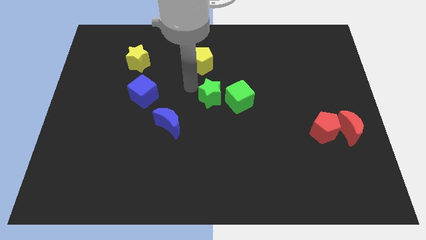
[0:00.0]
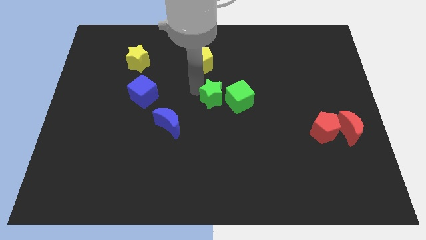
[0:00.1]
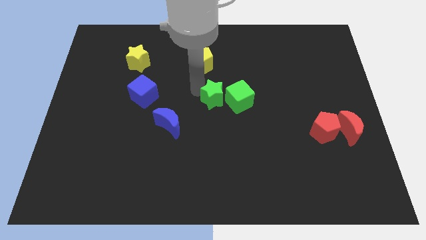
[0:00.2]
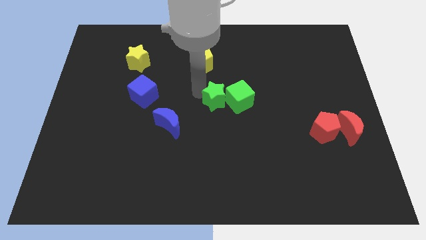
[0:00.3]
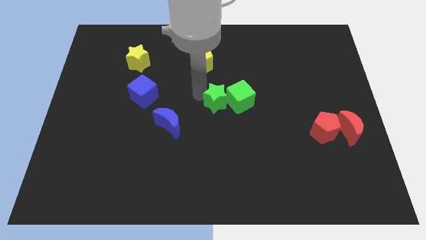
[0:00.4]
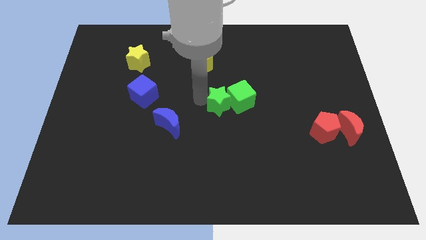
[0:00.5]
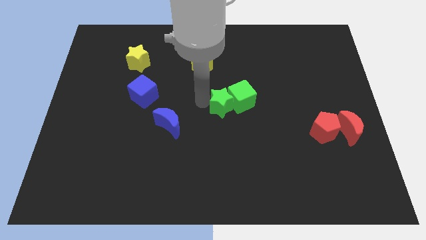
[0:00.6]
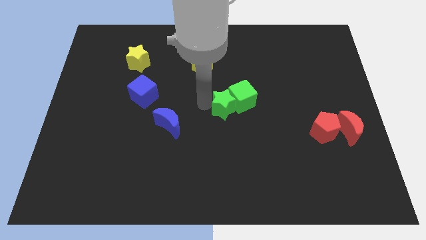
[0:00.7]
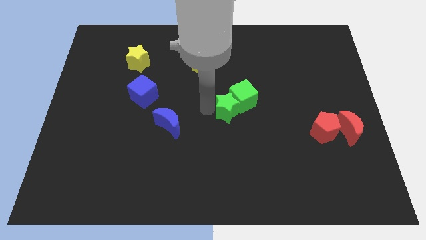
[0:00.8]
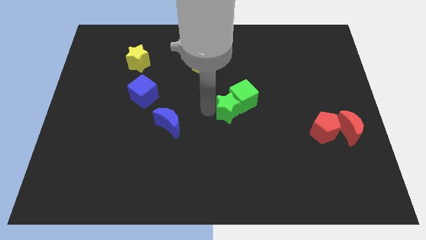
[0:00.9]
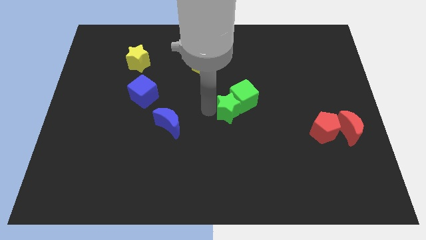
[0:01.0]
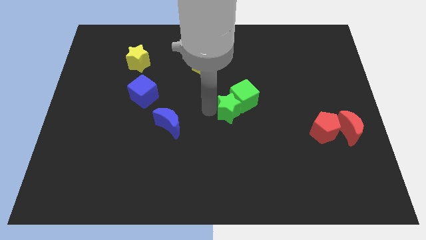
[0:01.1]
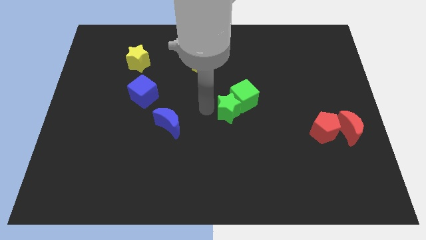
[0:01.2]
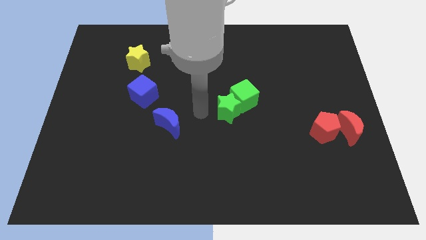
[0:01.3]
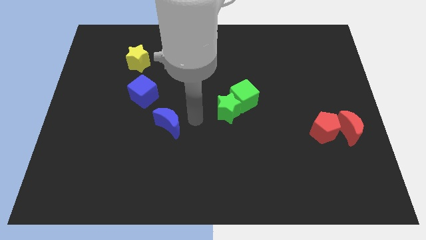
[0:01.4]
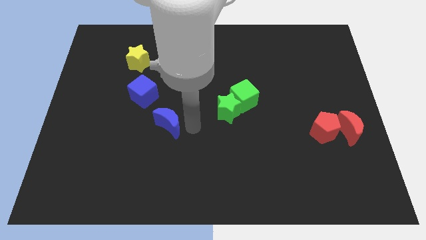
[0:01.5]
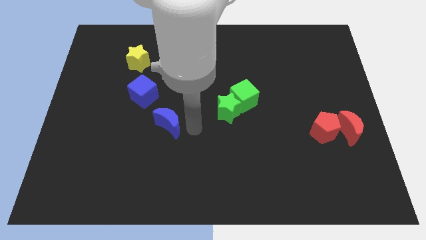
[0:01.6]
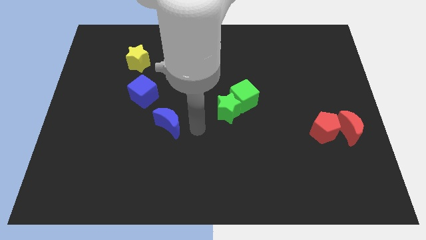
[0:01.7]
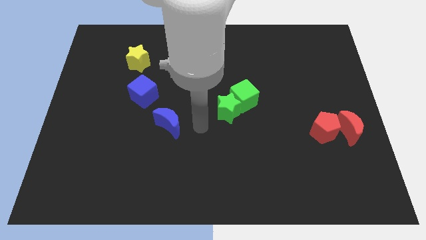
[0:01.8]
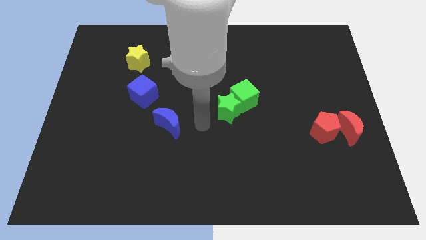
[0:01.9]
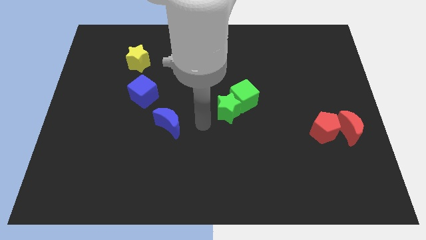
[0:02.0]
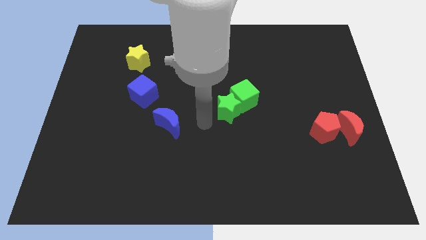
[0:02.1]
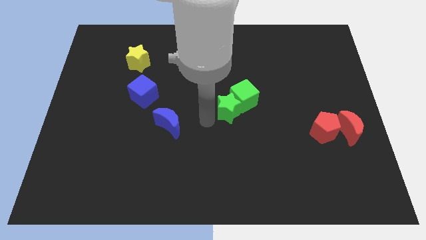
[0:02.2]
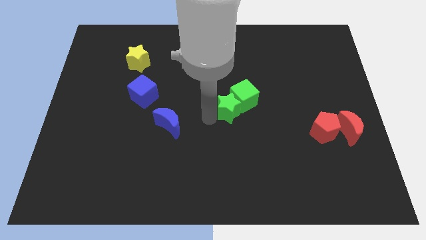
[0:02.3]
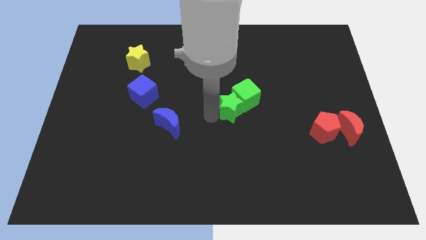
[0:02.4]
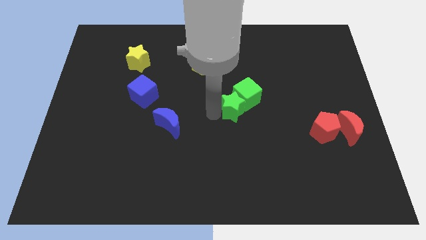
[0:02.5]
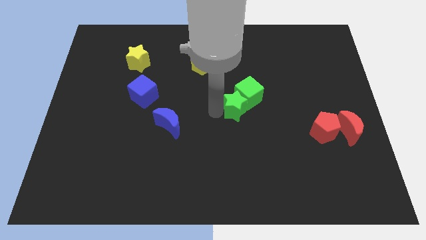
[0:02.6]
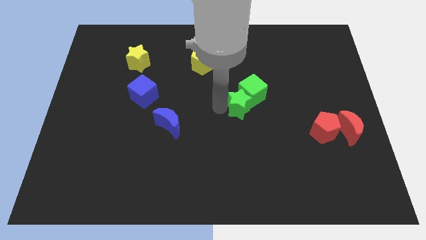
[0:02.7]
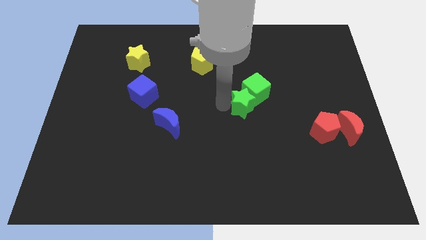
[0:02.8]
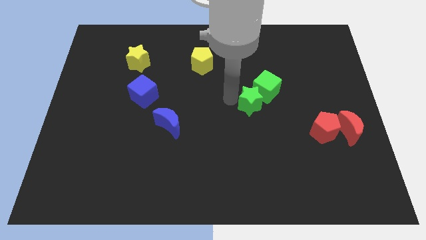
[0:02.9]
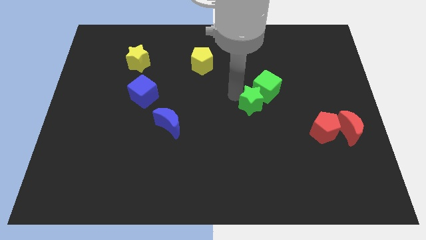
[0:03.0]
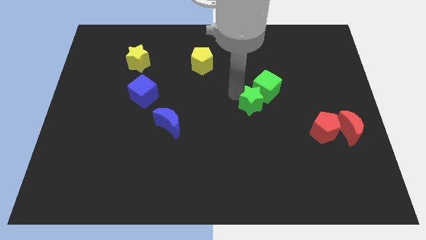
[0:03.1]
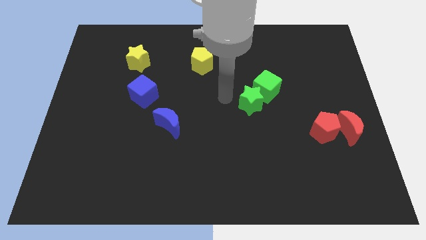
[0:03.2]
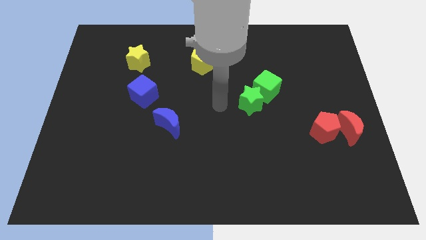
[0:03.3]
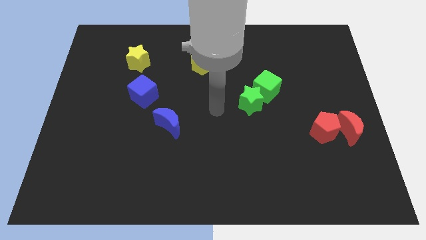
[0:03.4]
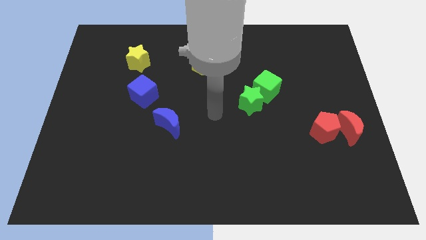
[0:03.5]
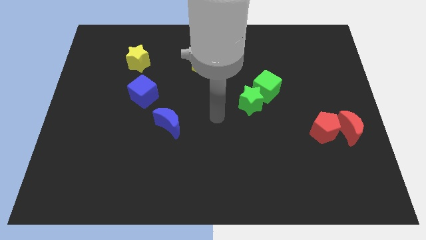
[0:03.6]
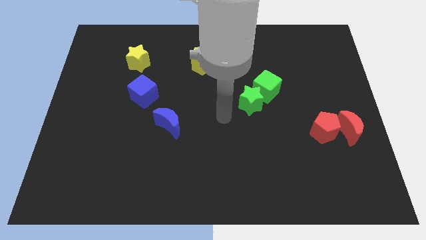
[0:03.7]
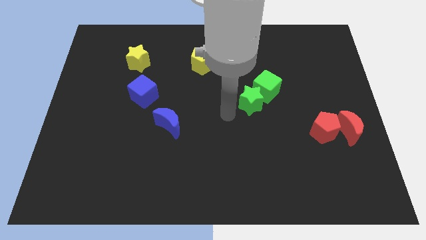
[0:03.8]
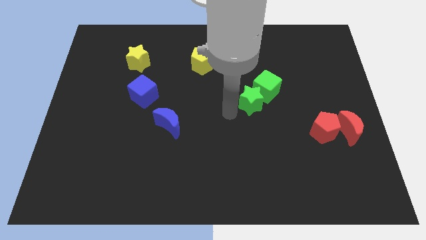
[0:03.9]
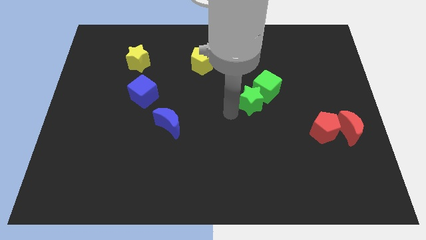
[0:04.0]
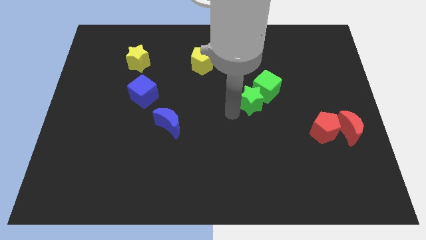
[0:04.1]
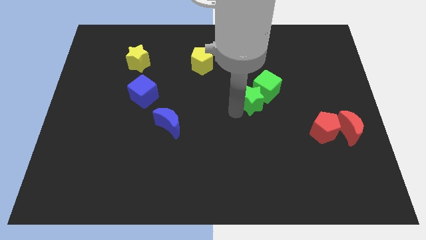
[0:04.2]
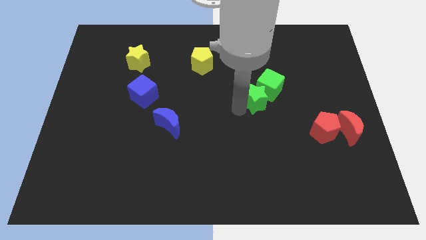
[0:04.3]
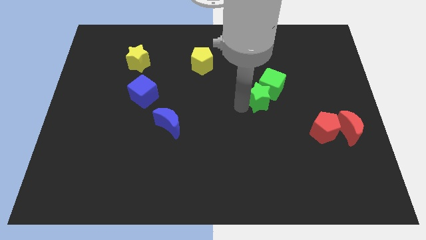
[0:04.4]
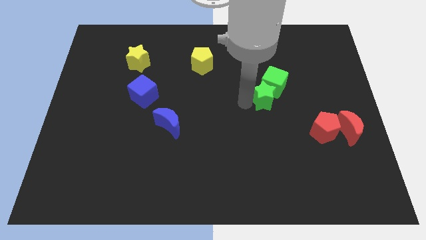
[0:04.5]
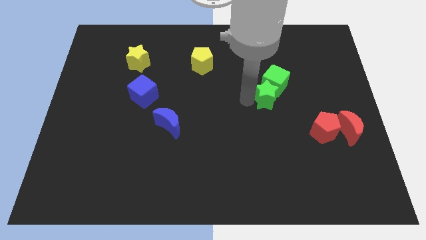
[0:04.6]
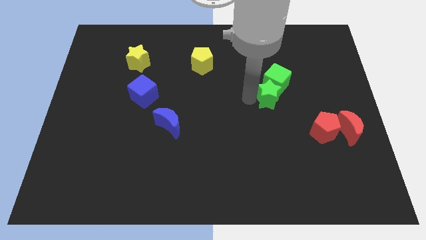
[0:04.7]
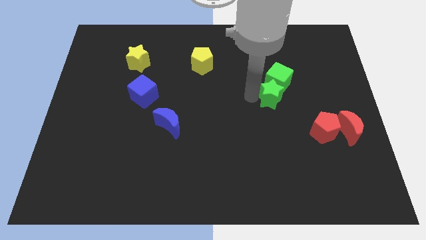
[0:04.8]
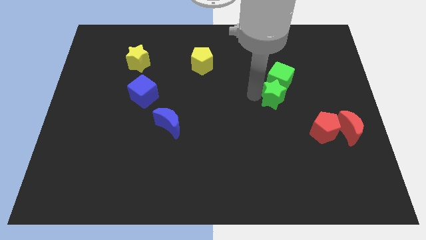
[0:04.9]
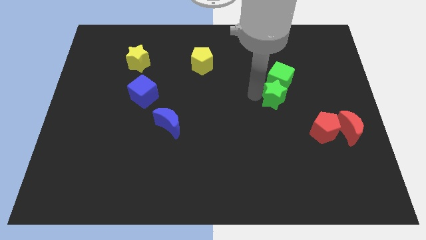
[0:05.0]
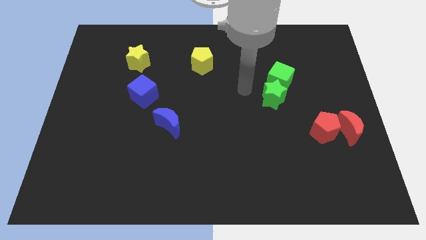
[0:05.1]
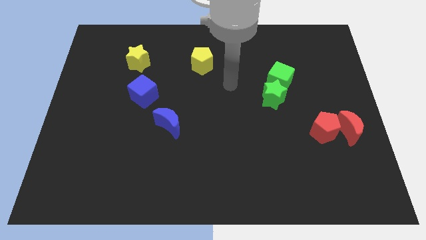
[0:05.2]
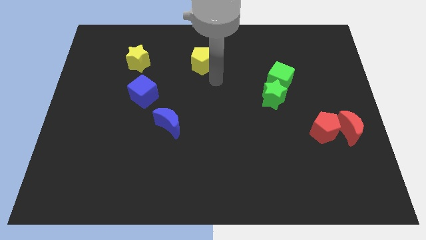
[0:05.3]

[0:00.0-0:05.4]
move green star and green cube towards the top right corner of the board

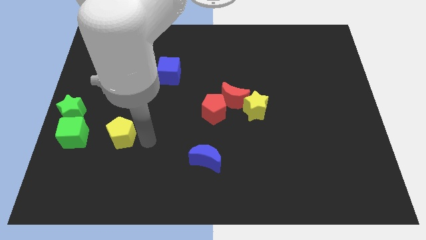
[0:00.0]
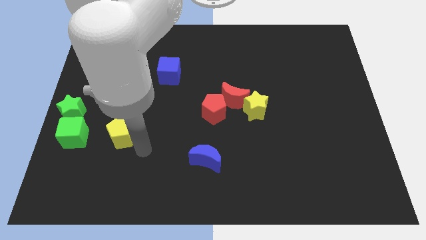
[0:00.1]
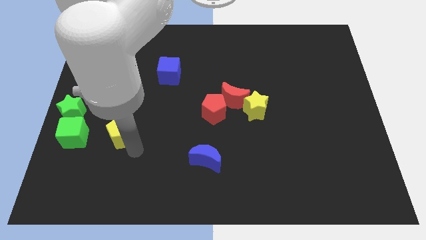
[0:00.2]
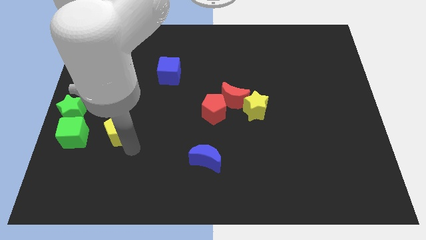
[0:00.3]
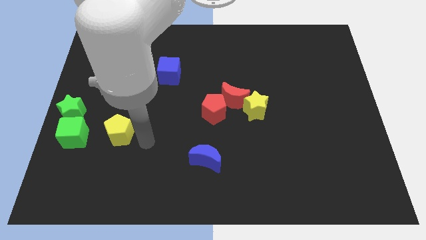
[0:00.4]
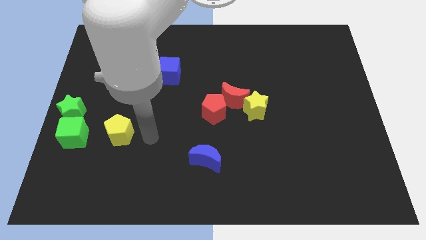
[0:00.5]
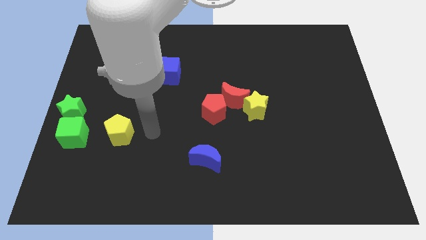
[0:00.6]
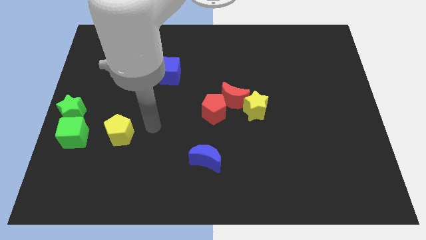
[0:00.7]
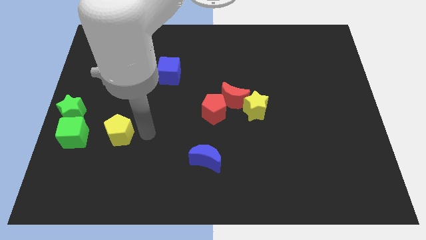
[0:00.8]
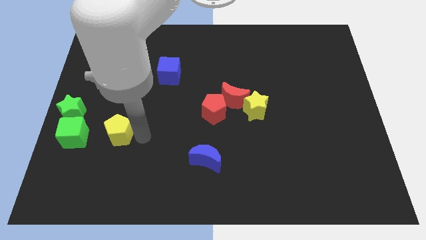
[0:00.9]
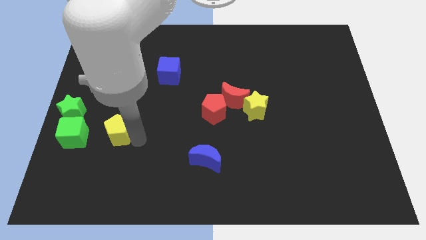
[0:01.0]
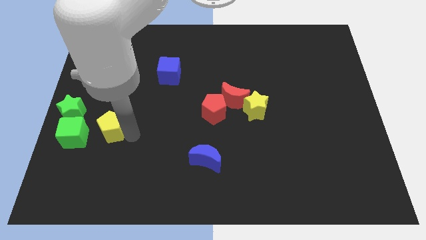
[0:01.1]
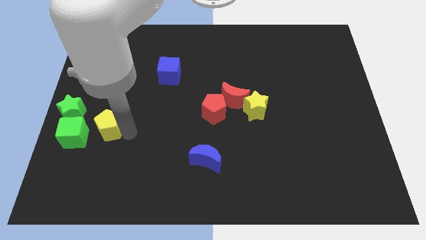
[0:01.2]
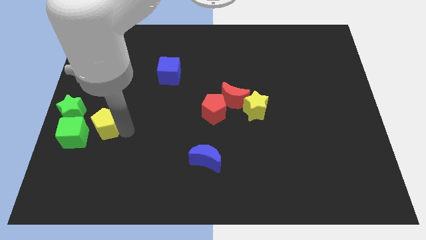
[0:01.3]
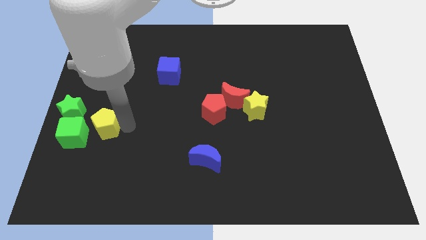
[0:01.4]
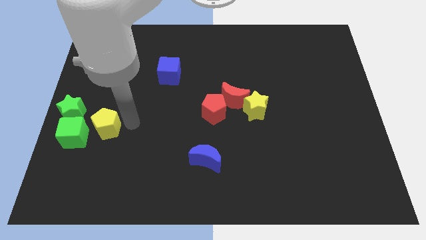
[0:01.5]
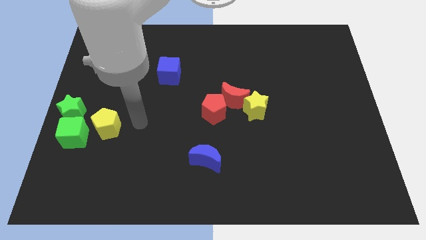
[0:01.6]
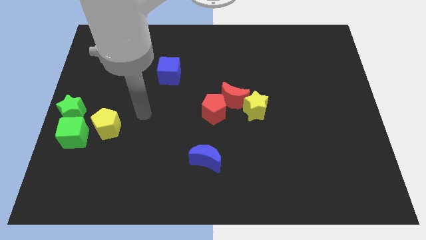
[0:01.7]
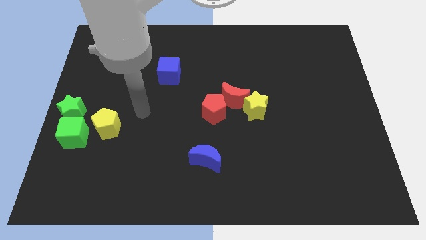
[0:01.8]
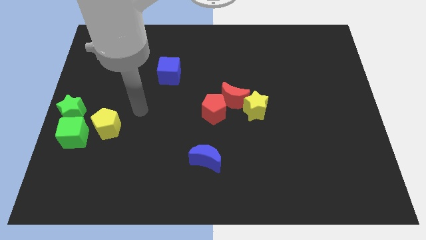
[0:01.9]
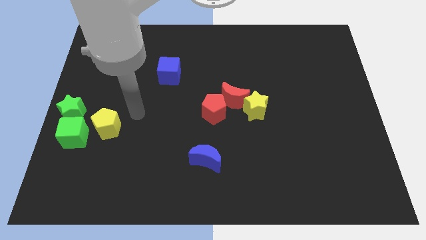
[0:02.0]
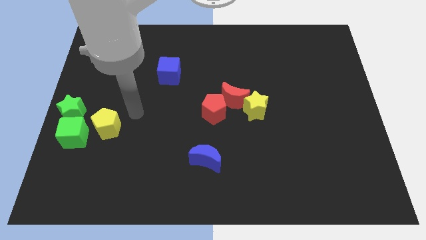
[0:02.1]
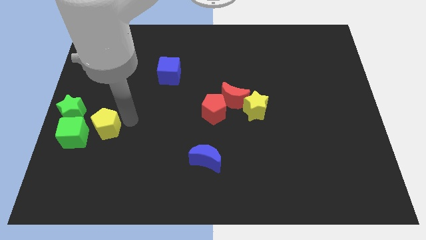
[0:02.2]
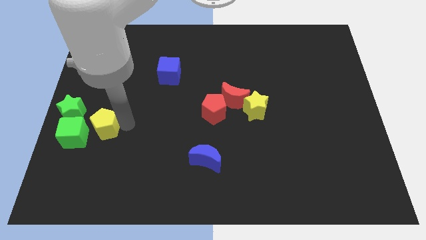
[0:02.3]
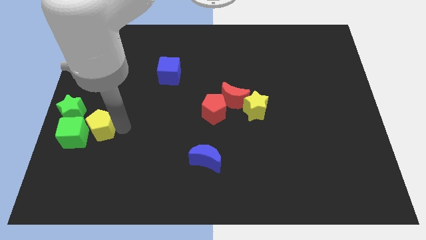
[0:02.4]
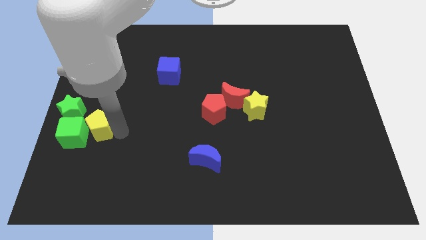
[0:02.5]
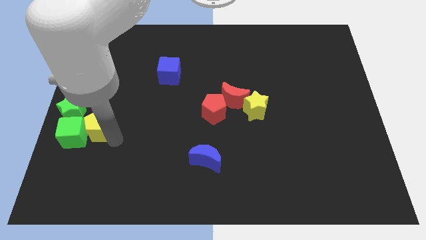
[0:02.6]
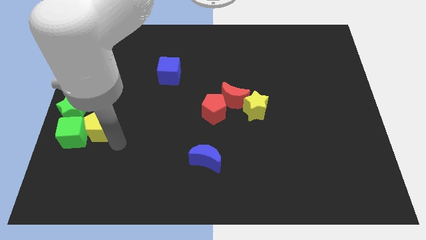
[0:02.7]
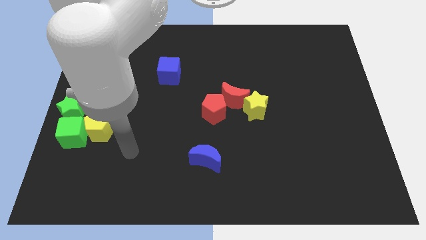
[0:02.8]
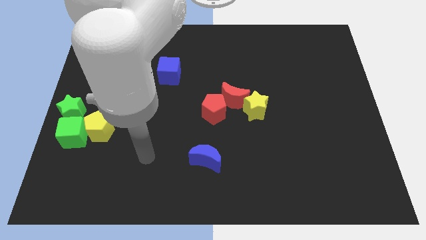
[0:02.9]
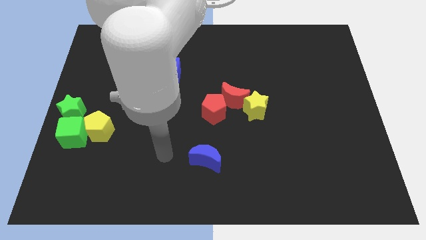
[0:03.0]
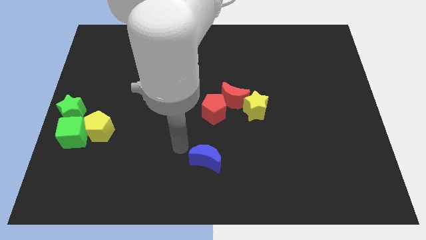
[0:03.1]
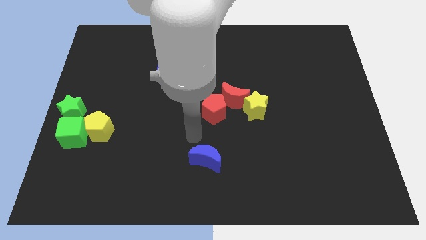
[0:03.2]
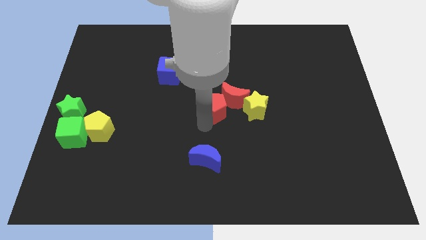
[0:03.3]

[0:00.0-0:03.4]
move the yellow pentagon to the center left
